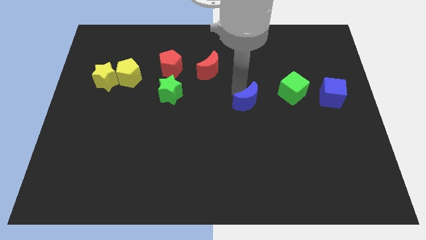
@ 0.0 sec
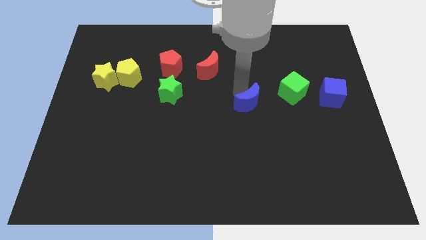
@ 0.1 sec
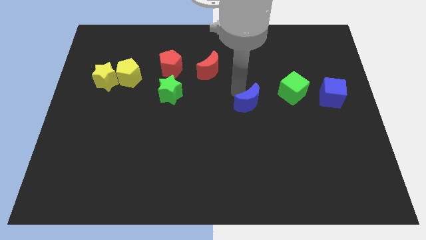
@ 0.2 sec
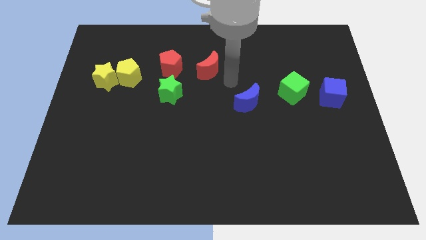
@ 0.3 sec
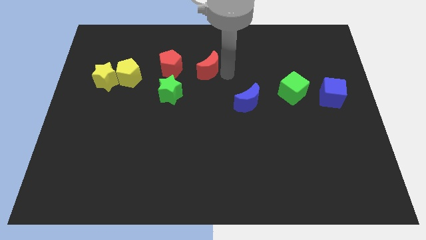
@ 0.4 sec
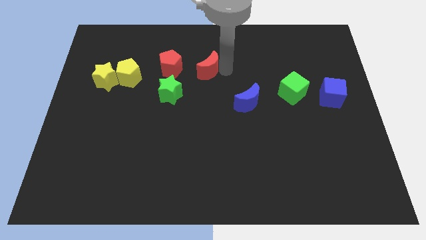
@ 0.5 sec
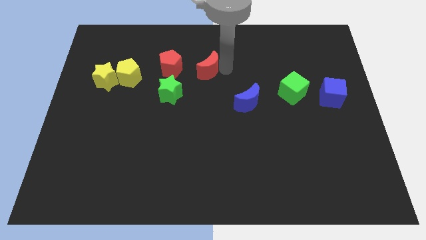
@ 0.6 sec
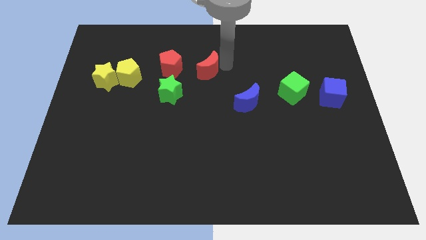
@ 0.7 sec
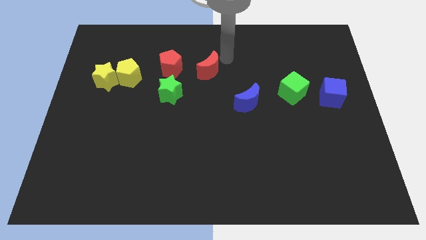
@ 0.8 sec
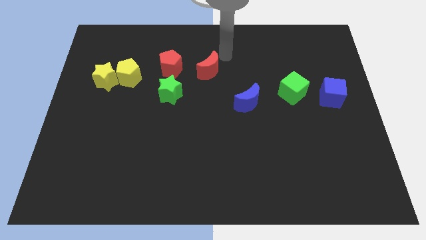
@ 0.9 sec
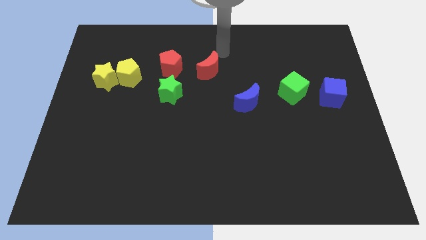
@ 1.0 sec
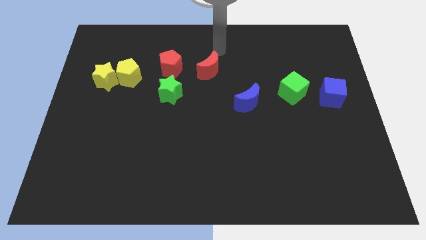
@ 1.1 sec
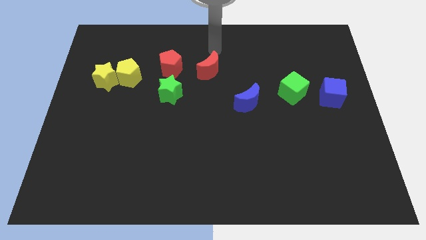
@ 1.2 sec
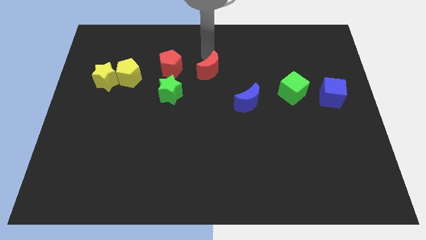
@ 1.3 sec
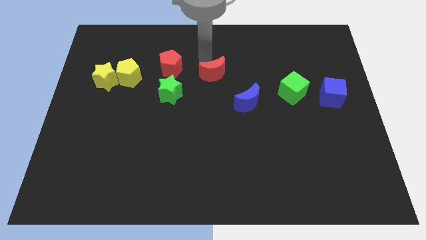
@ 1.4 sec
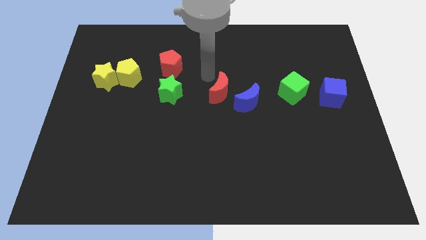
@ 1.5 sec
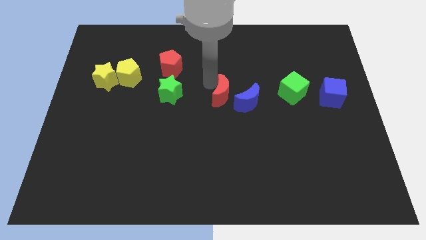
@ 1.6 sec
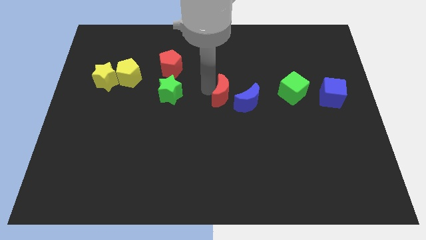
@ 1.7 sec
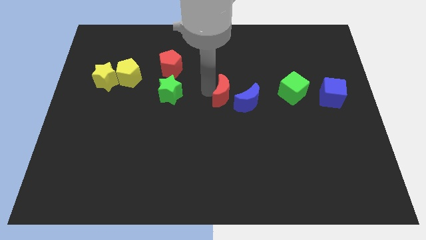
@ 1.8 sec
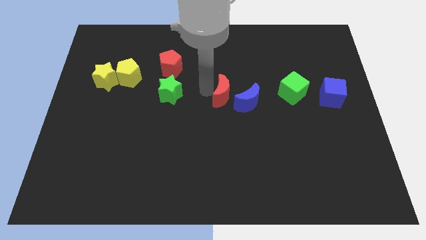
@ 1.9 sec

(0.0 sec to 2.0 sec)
slide the red crescent towards the left side of the blue crescent

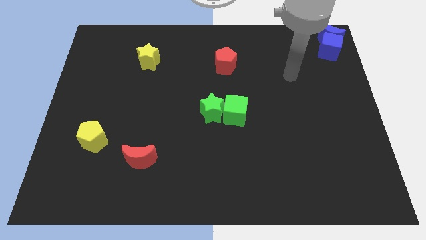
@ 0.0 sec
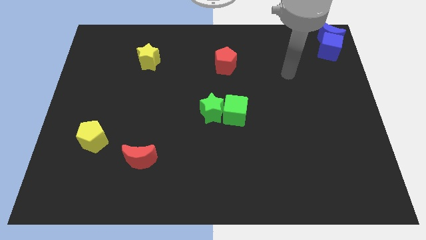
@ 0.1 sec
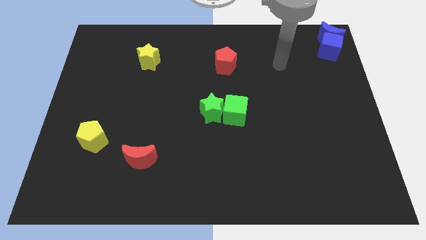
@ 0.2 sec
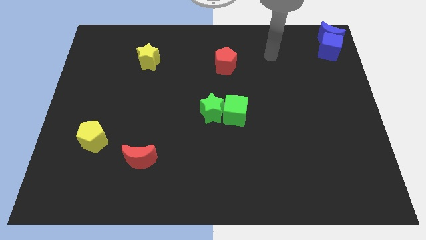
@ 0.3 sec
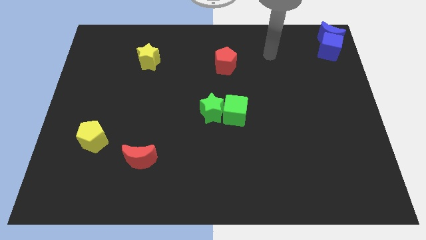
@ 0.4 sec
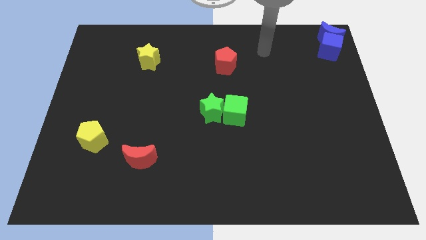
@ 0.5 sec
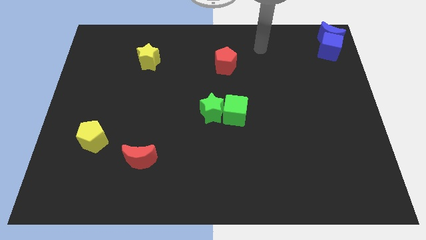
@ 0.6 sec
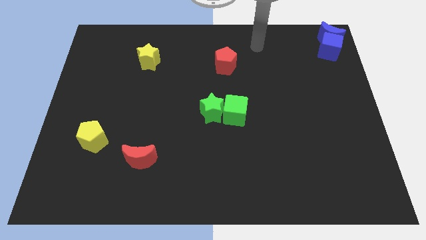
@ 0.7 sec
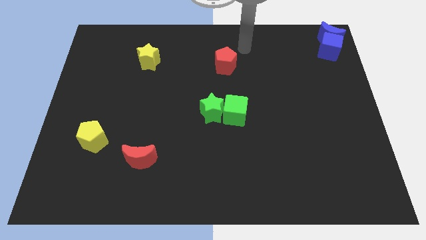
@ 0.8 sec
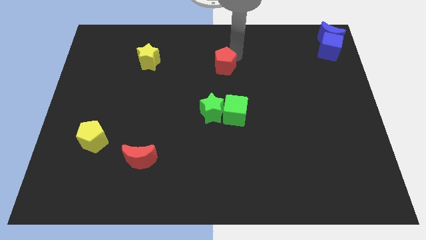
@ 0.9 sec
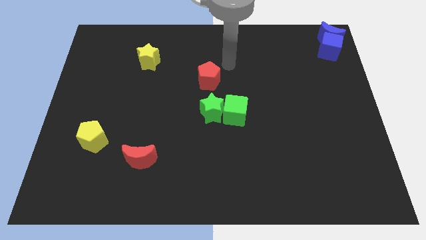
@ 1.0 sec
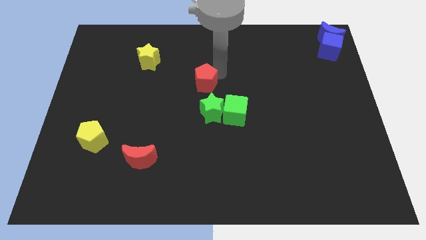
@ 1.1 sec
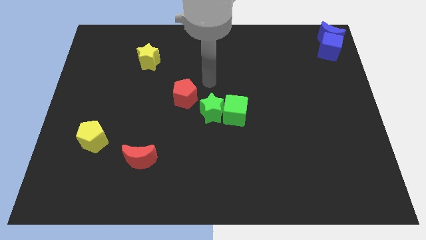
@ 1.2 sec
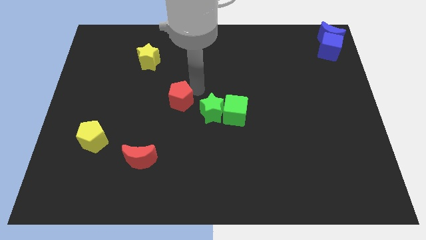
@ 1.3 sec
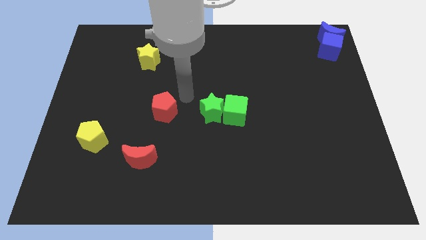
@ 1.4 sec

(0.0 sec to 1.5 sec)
slide the red pentagon to the left side of the green star

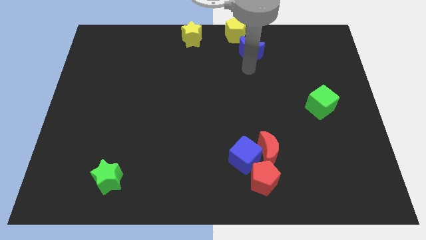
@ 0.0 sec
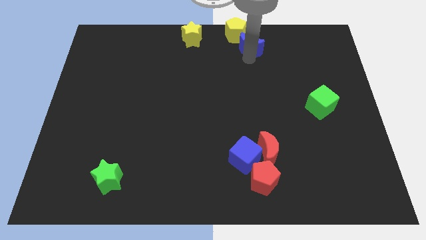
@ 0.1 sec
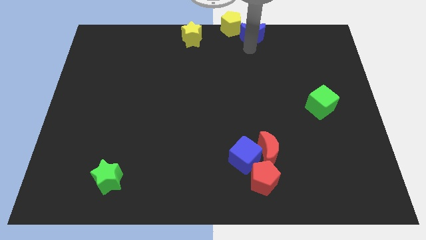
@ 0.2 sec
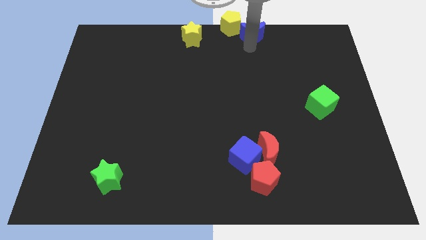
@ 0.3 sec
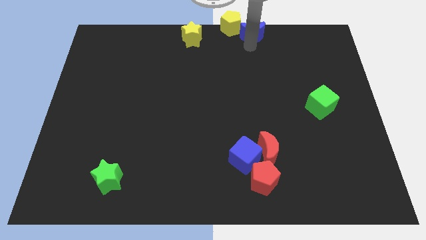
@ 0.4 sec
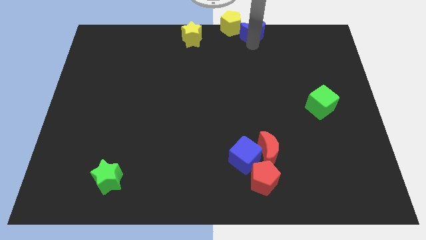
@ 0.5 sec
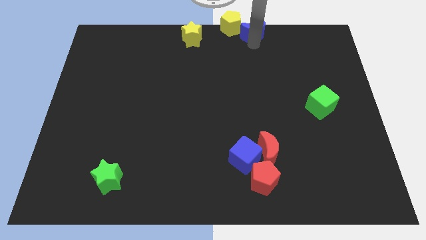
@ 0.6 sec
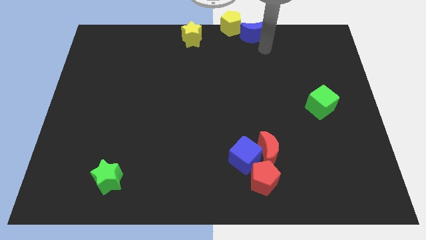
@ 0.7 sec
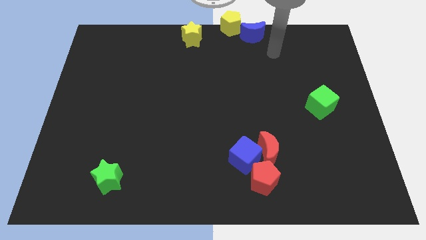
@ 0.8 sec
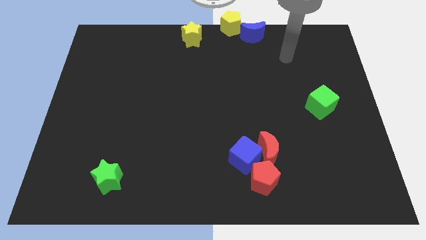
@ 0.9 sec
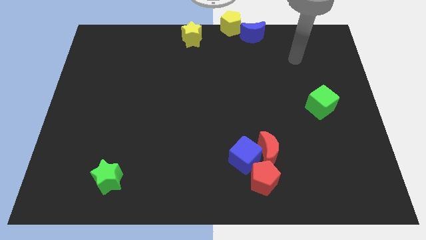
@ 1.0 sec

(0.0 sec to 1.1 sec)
place the blue crescent right to the yellow pentagon

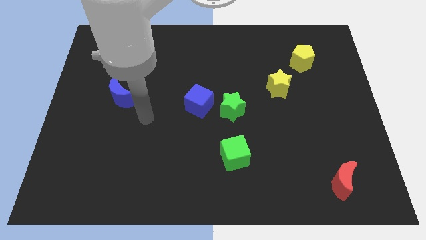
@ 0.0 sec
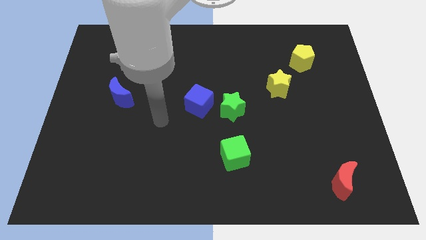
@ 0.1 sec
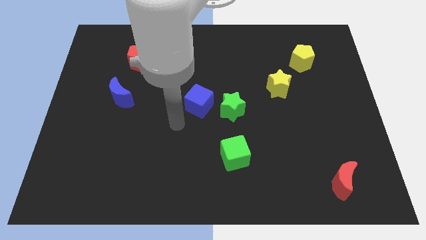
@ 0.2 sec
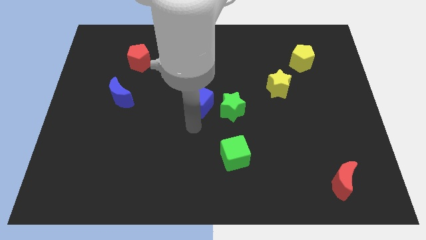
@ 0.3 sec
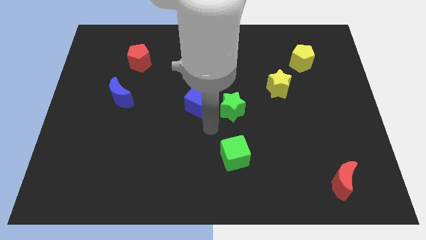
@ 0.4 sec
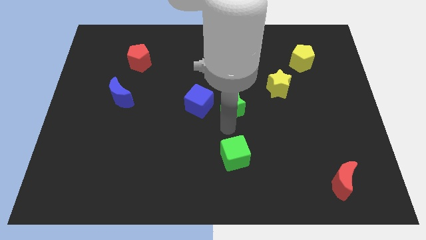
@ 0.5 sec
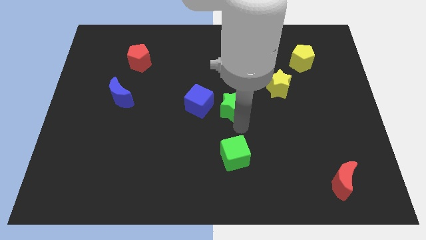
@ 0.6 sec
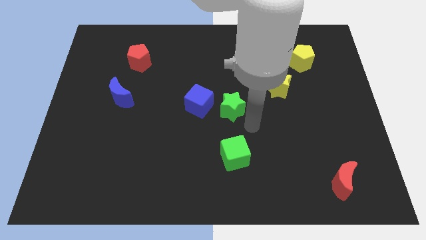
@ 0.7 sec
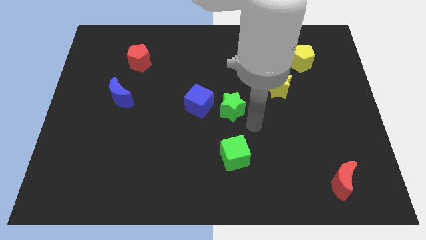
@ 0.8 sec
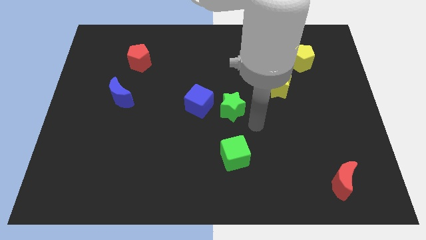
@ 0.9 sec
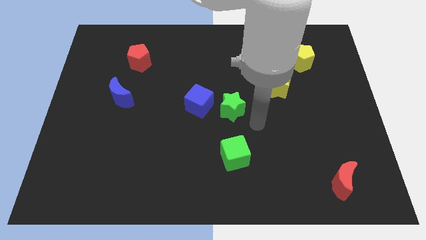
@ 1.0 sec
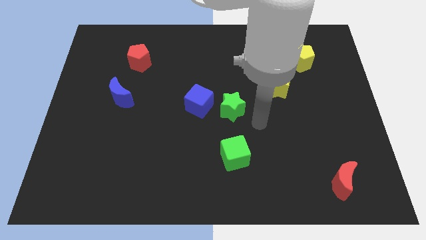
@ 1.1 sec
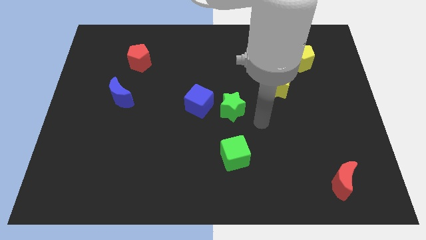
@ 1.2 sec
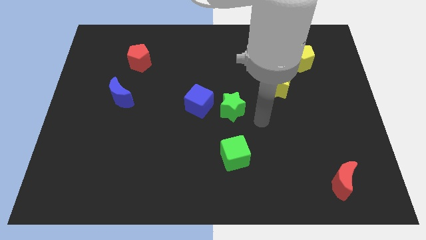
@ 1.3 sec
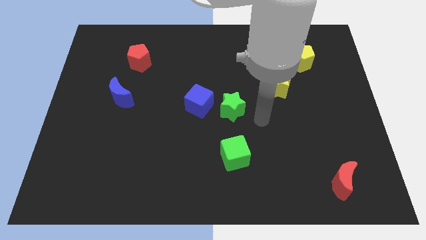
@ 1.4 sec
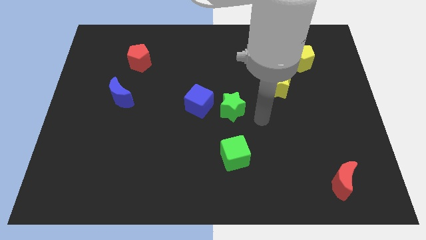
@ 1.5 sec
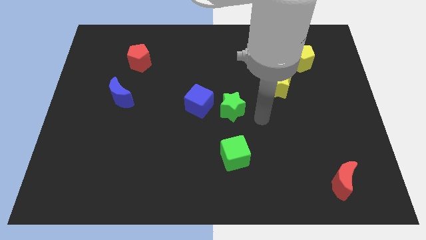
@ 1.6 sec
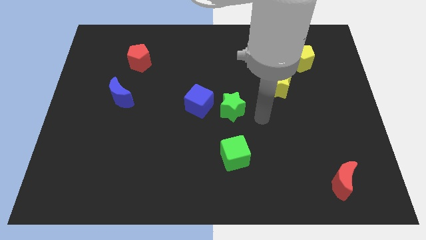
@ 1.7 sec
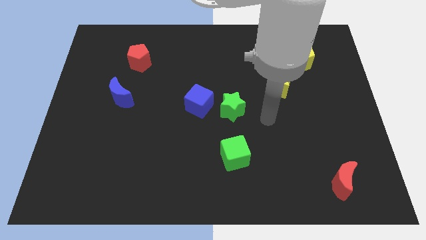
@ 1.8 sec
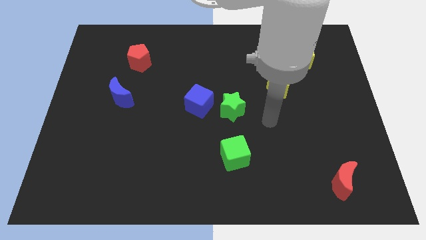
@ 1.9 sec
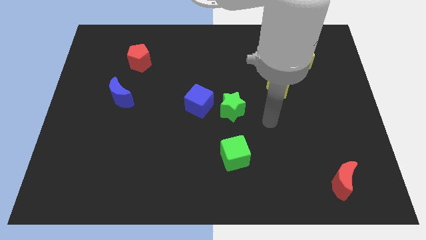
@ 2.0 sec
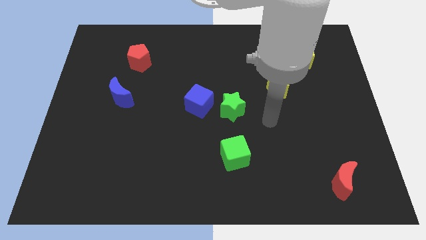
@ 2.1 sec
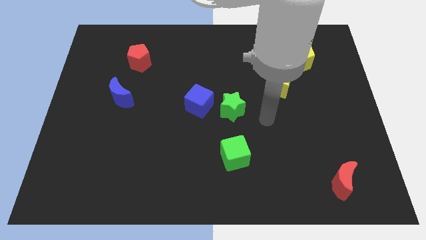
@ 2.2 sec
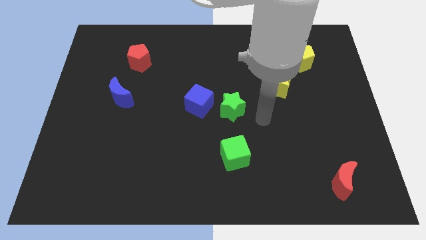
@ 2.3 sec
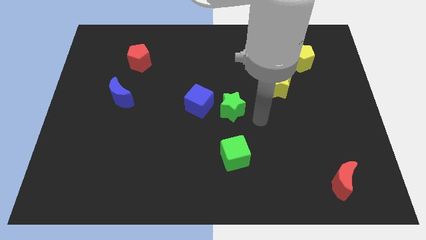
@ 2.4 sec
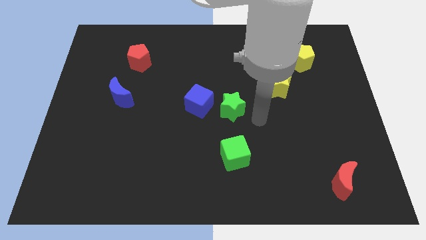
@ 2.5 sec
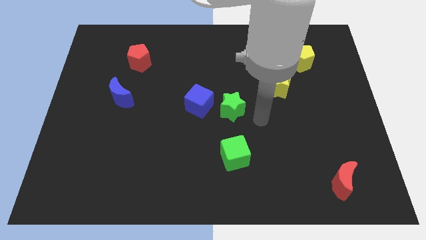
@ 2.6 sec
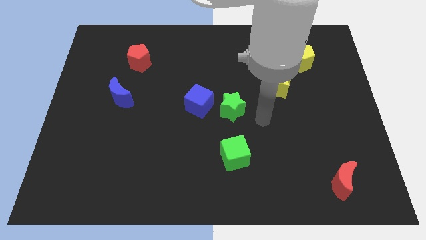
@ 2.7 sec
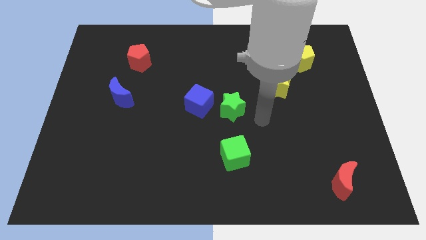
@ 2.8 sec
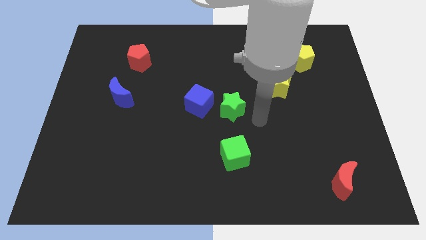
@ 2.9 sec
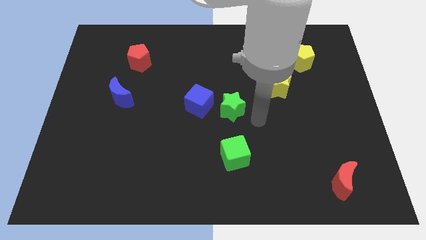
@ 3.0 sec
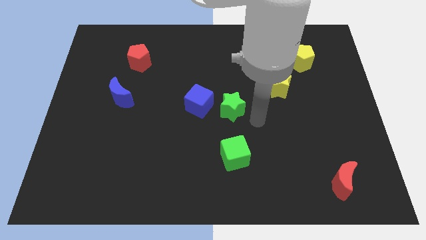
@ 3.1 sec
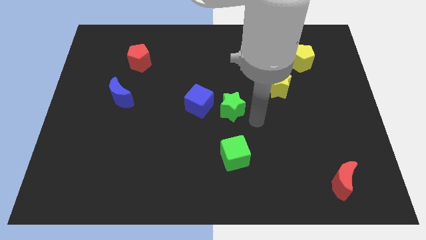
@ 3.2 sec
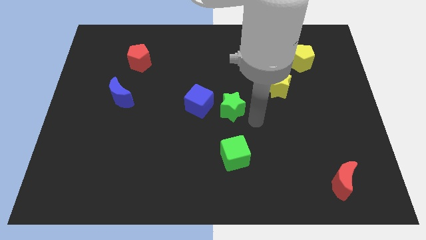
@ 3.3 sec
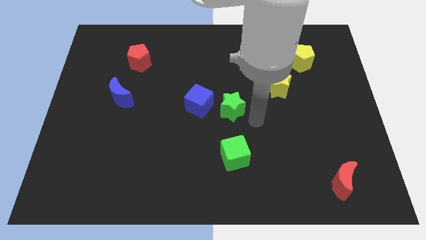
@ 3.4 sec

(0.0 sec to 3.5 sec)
point your hand to the right of the green star

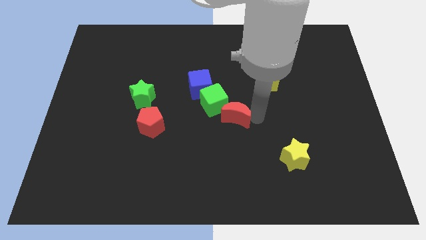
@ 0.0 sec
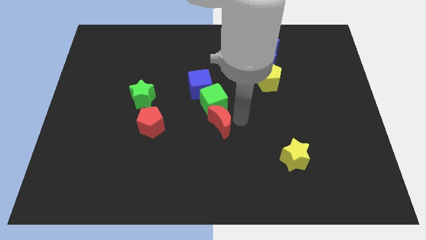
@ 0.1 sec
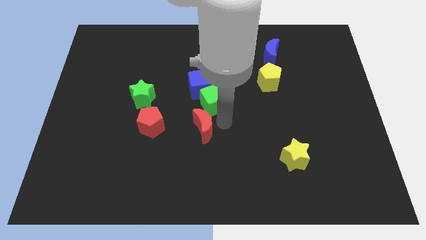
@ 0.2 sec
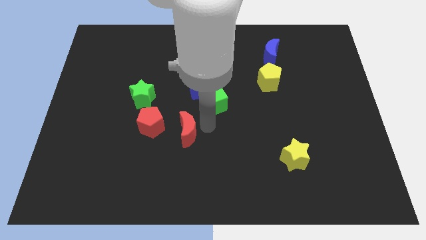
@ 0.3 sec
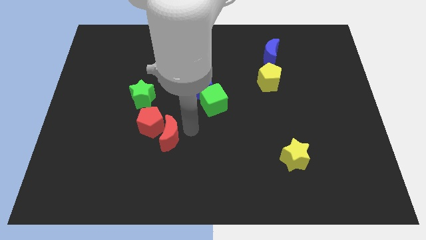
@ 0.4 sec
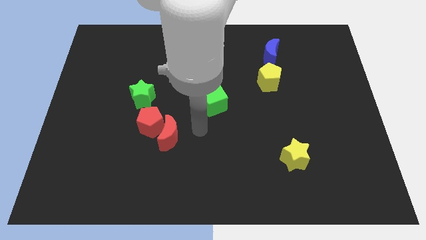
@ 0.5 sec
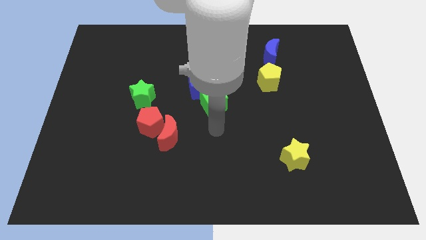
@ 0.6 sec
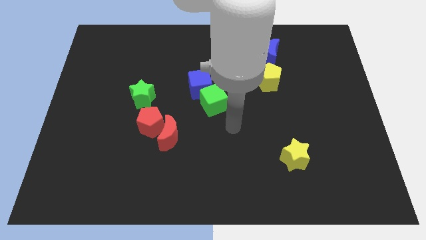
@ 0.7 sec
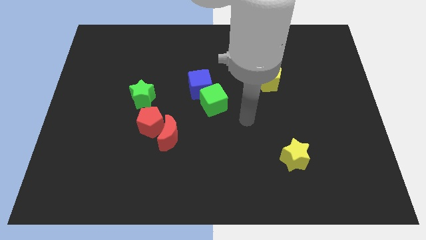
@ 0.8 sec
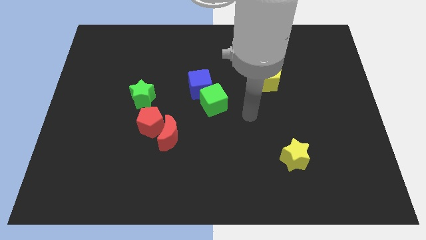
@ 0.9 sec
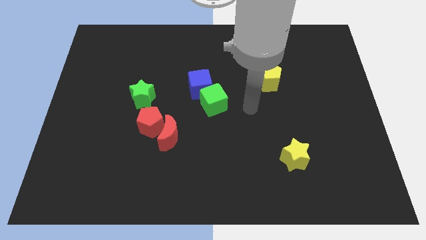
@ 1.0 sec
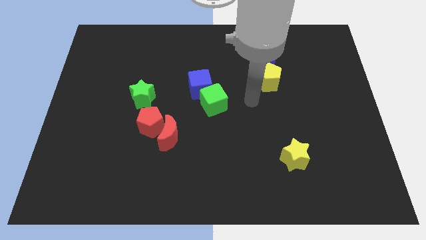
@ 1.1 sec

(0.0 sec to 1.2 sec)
drag red crescent close to red pentagon
